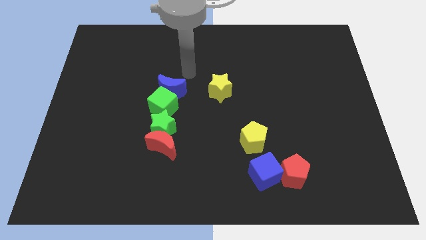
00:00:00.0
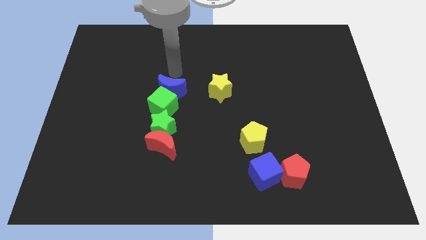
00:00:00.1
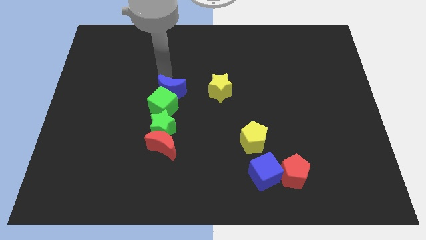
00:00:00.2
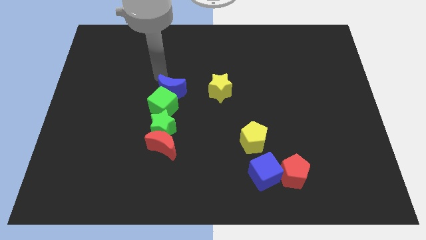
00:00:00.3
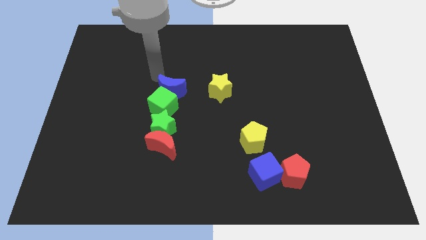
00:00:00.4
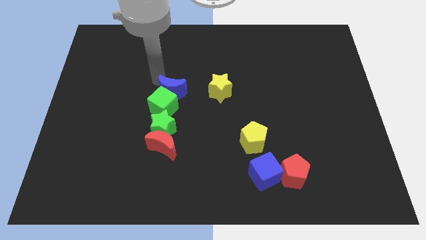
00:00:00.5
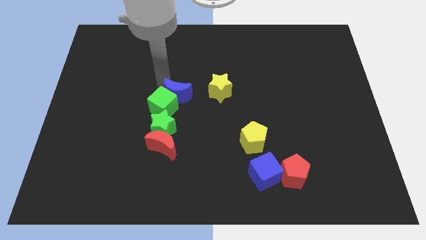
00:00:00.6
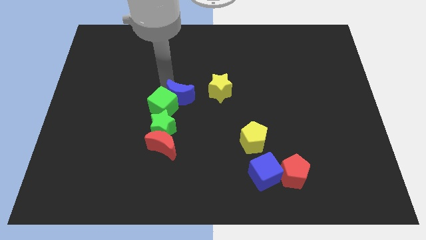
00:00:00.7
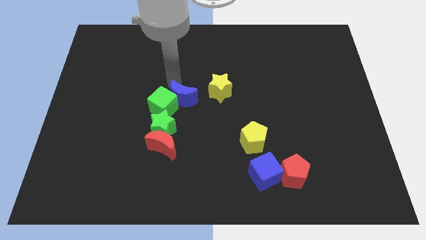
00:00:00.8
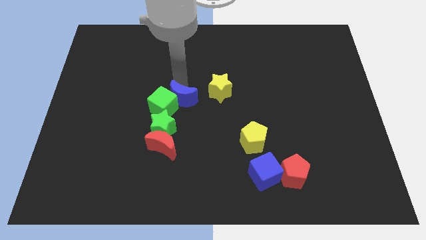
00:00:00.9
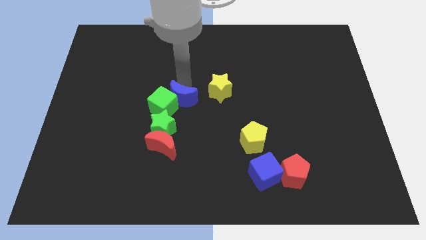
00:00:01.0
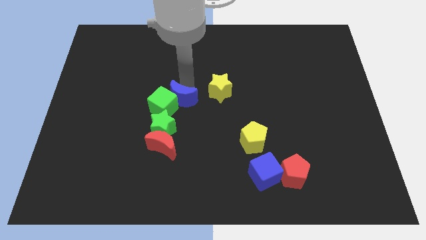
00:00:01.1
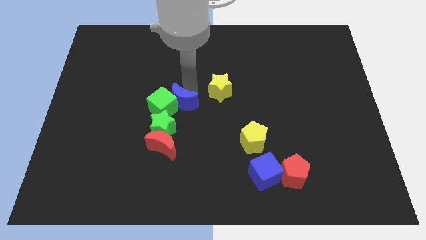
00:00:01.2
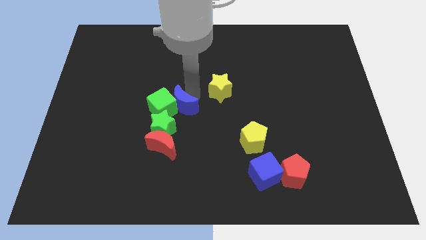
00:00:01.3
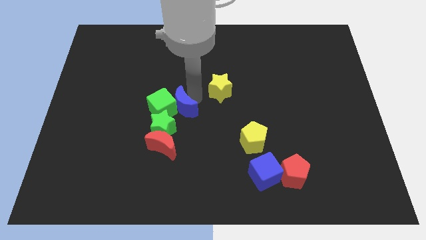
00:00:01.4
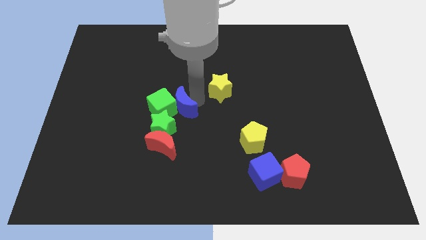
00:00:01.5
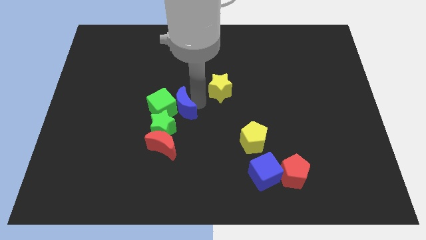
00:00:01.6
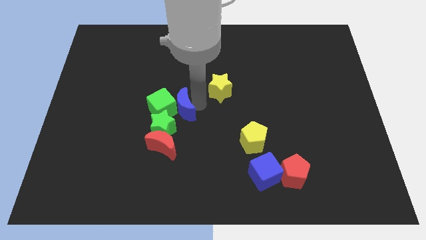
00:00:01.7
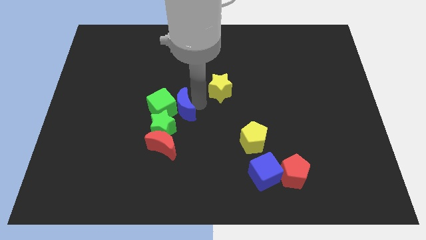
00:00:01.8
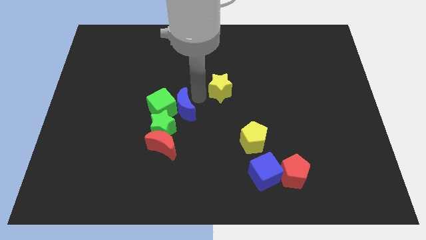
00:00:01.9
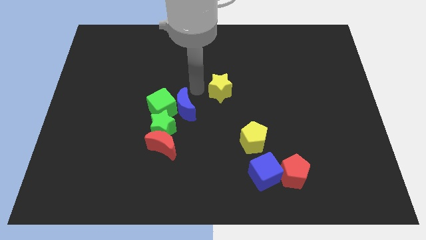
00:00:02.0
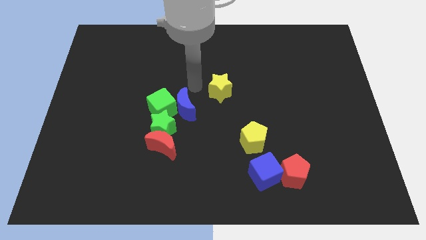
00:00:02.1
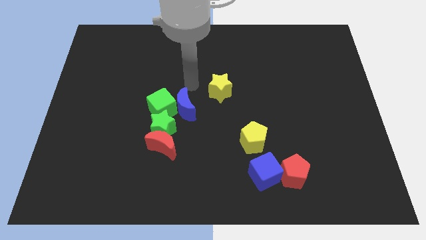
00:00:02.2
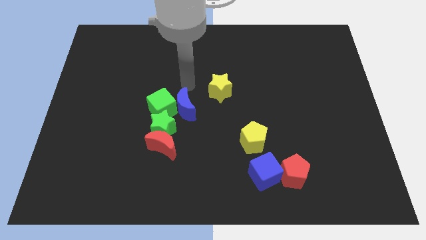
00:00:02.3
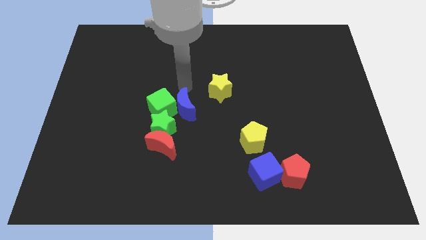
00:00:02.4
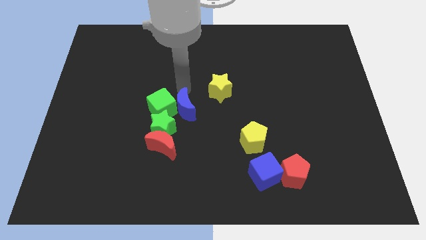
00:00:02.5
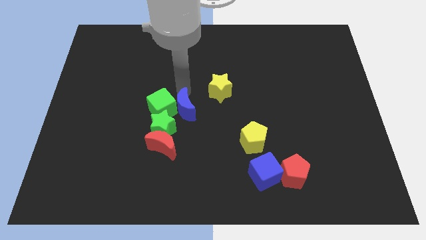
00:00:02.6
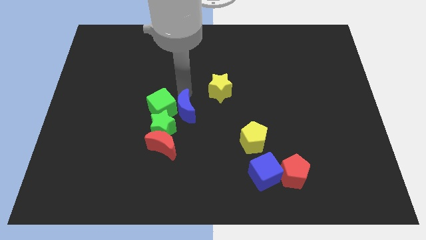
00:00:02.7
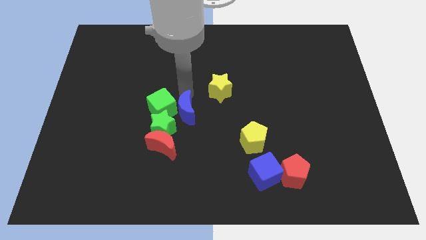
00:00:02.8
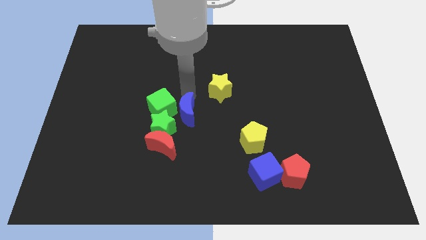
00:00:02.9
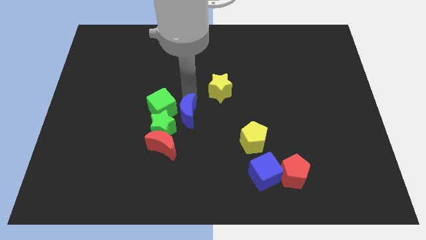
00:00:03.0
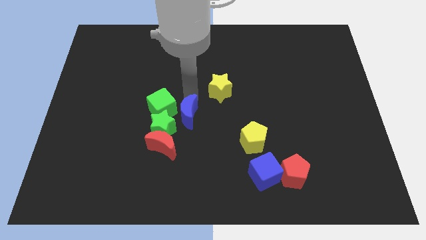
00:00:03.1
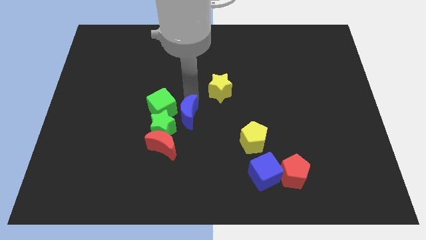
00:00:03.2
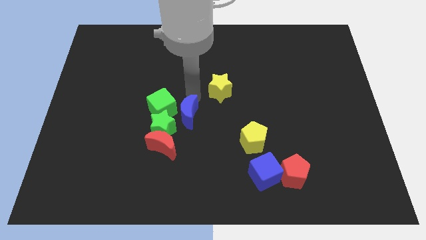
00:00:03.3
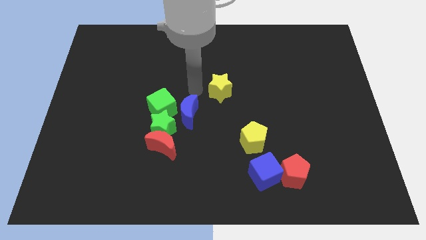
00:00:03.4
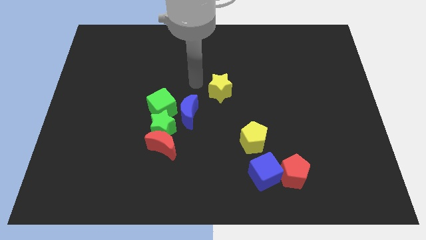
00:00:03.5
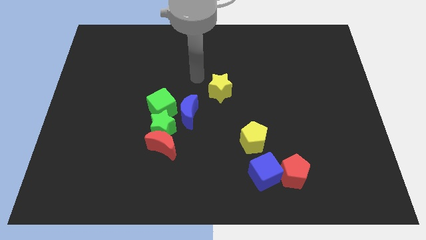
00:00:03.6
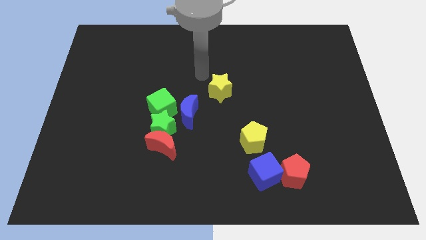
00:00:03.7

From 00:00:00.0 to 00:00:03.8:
place the blue crescent to the right side of the green blocks

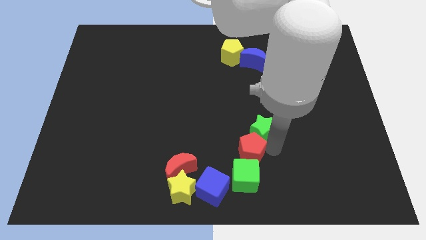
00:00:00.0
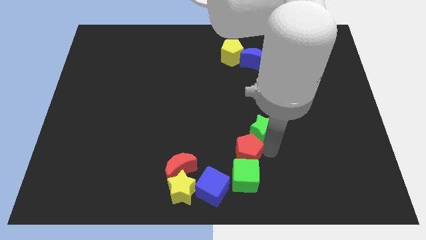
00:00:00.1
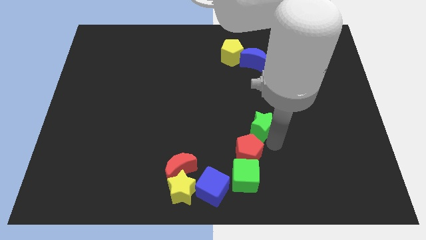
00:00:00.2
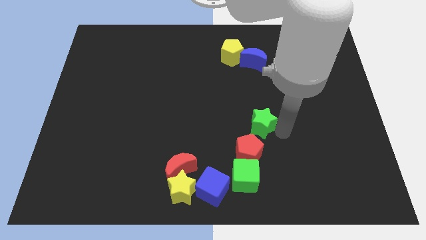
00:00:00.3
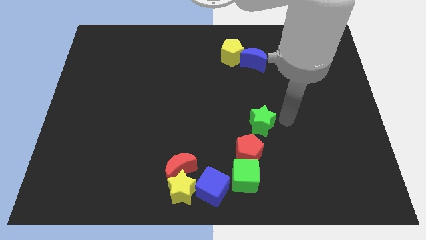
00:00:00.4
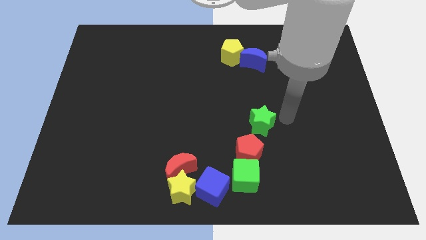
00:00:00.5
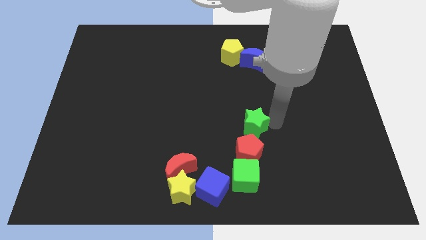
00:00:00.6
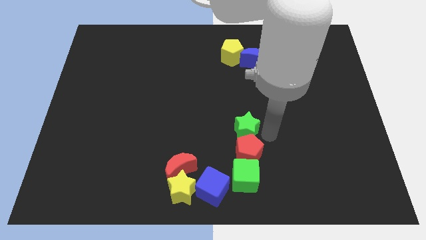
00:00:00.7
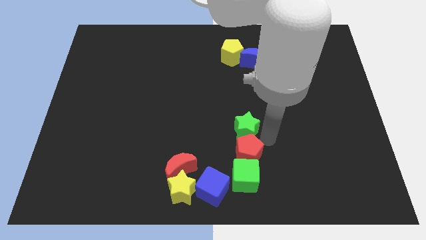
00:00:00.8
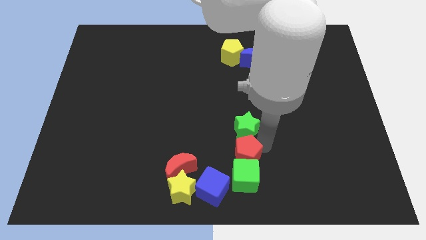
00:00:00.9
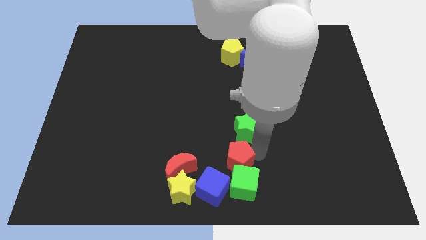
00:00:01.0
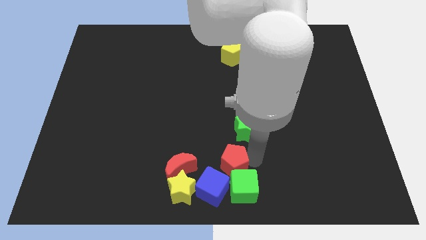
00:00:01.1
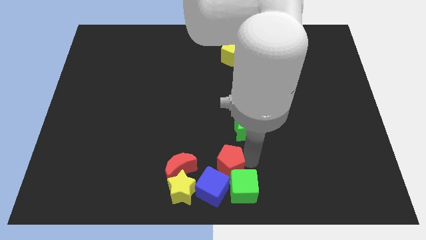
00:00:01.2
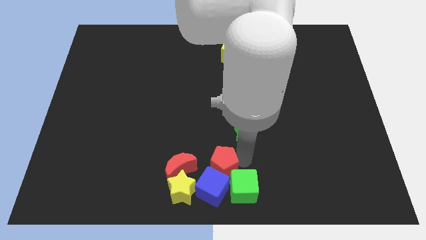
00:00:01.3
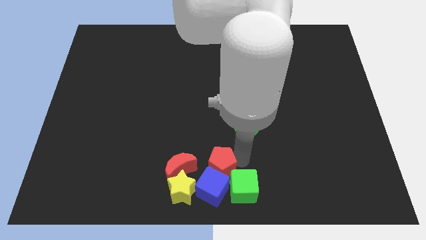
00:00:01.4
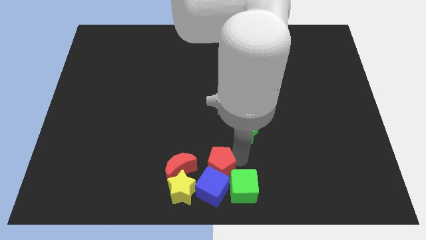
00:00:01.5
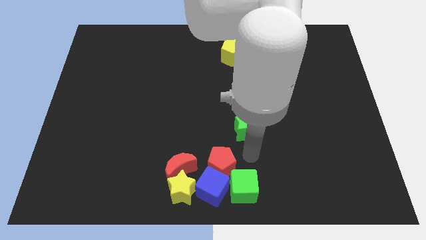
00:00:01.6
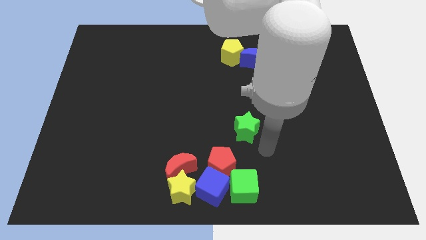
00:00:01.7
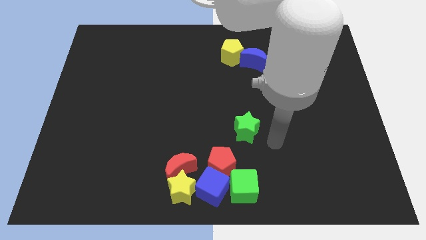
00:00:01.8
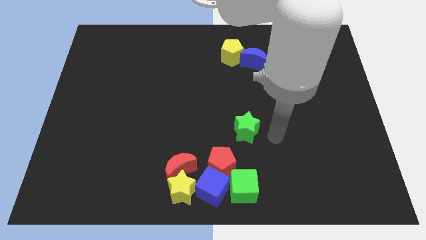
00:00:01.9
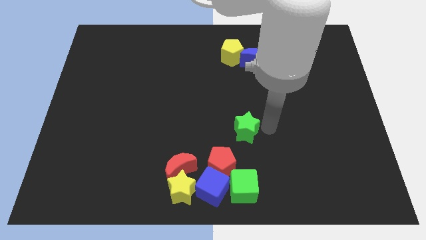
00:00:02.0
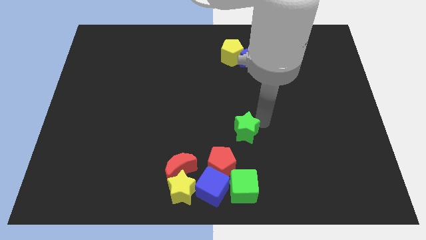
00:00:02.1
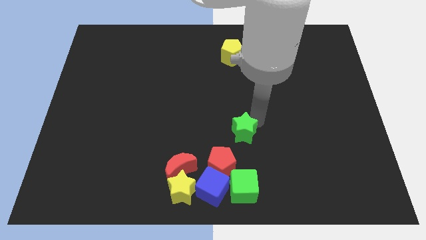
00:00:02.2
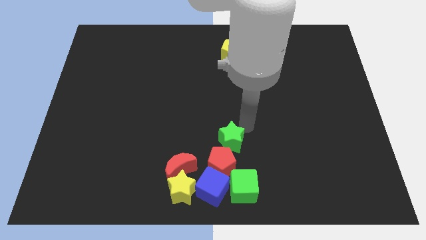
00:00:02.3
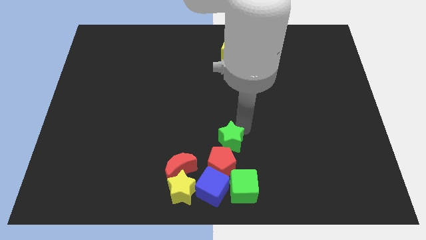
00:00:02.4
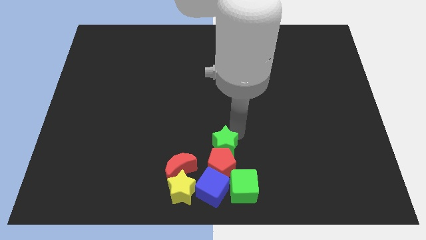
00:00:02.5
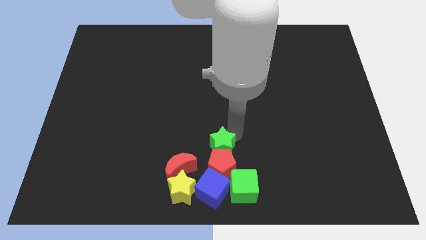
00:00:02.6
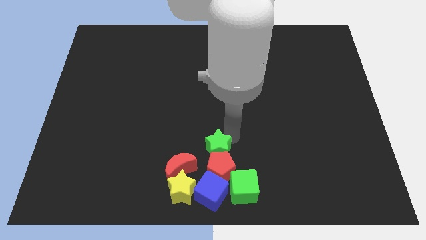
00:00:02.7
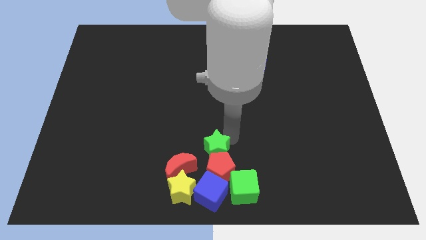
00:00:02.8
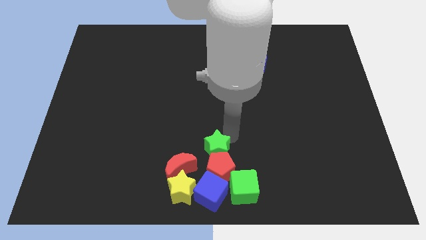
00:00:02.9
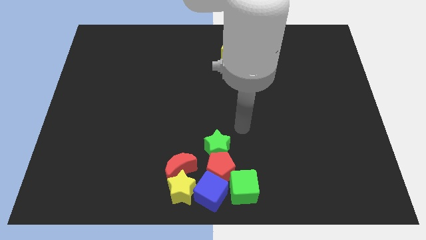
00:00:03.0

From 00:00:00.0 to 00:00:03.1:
push the red pentagon into blue cube and green star above red pentagon

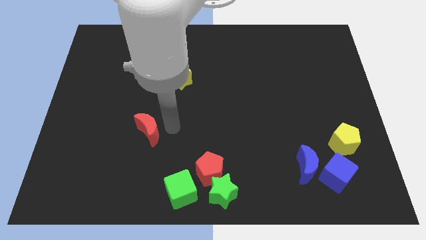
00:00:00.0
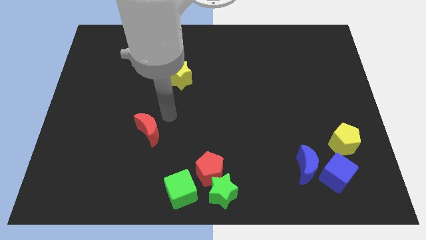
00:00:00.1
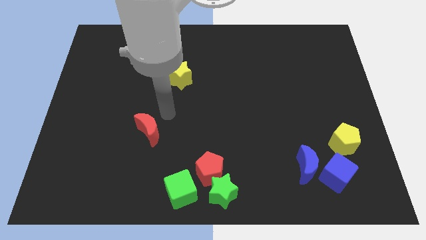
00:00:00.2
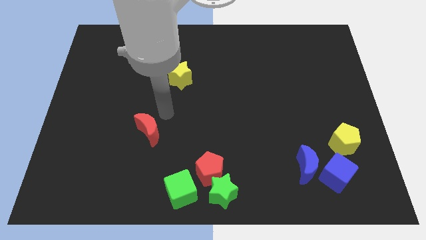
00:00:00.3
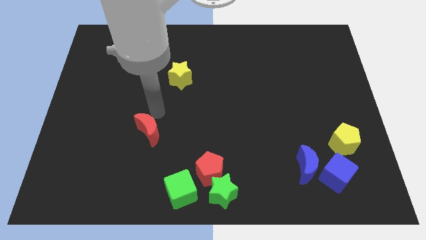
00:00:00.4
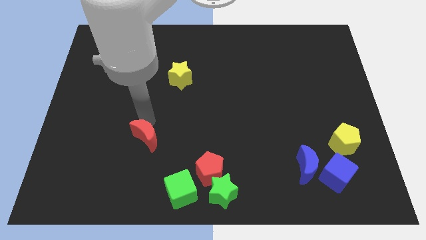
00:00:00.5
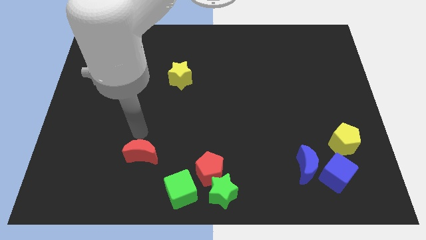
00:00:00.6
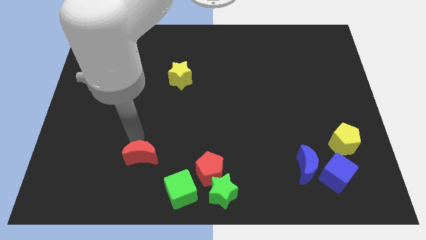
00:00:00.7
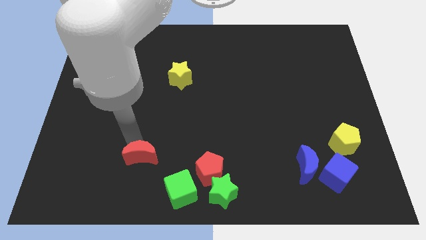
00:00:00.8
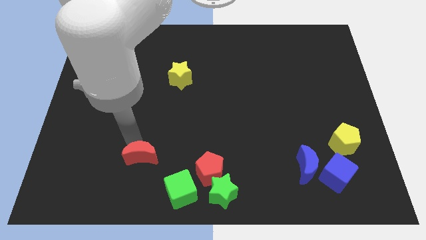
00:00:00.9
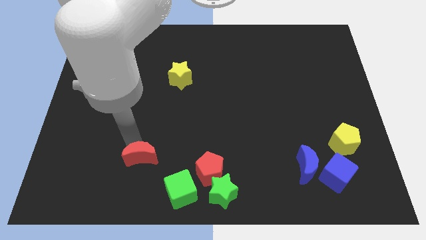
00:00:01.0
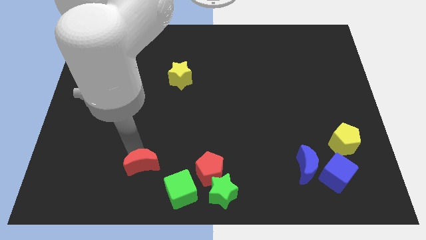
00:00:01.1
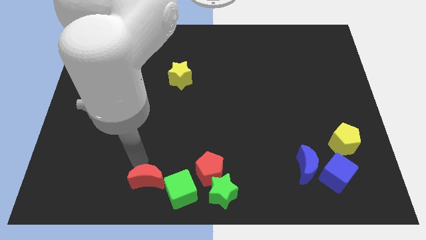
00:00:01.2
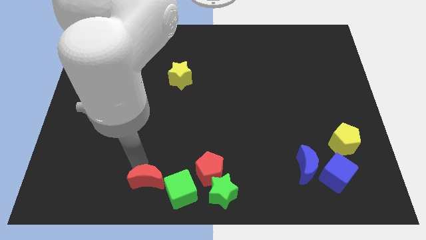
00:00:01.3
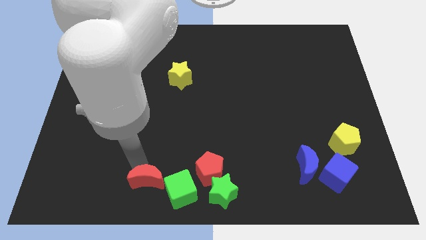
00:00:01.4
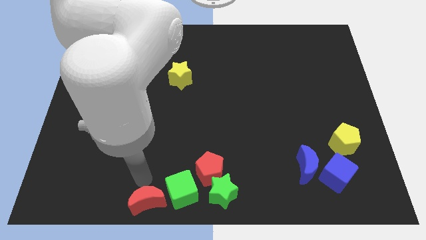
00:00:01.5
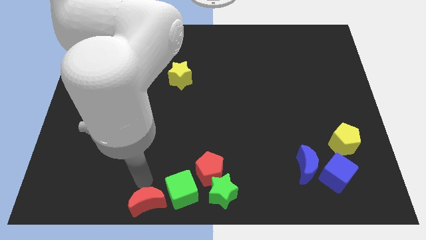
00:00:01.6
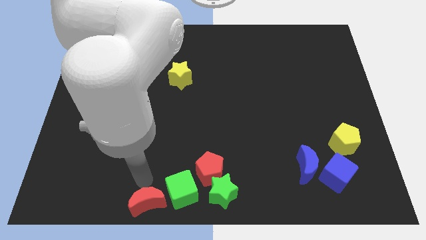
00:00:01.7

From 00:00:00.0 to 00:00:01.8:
place the red crescent at the left of the green cube

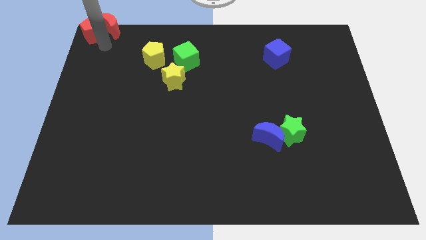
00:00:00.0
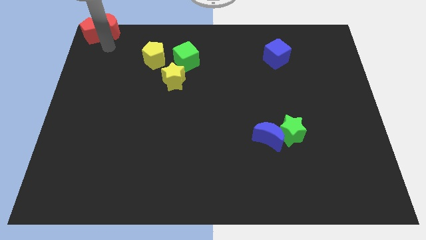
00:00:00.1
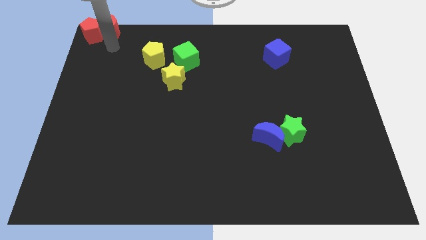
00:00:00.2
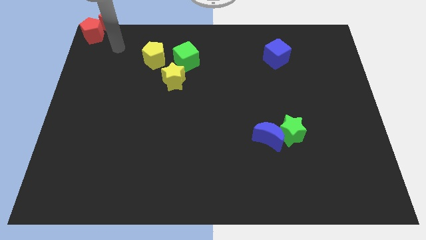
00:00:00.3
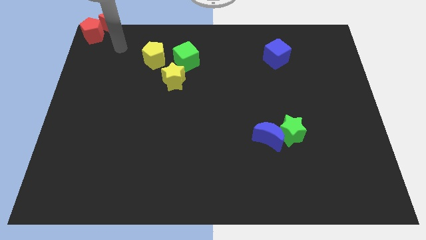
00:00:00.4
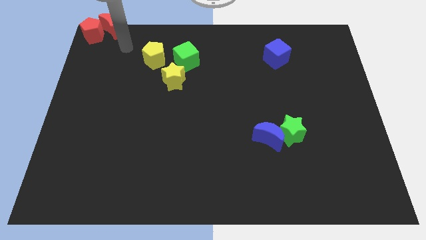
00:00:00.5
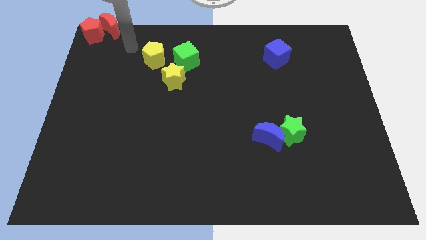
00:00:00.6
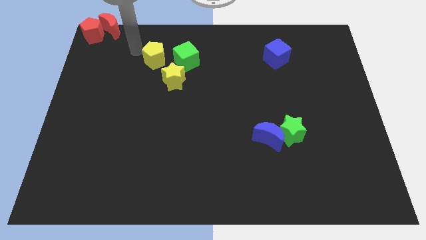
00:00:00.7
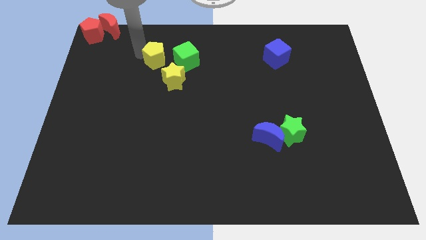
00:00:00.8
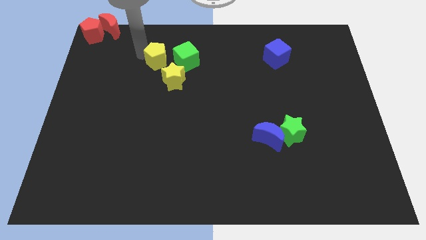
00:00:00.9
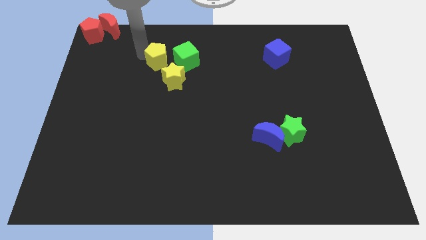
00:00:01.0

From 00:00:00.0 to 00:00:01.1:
move the arm away from the red pentagon
